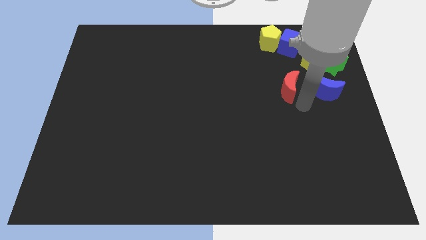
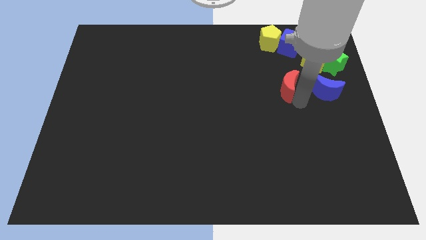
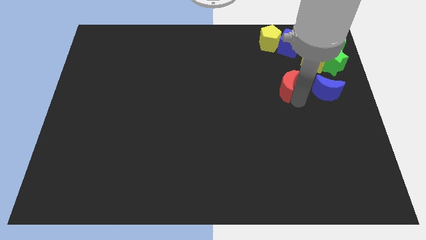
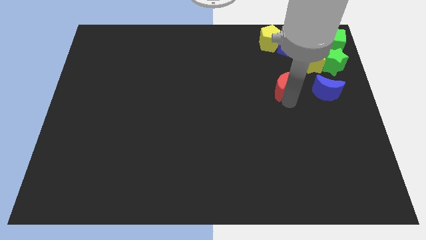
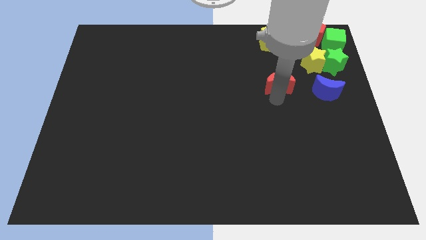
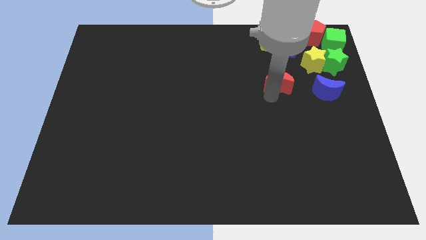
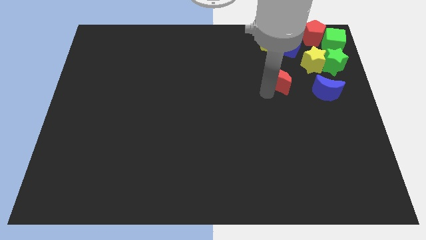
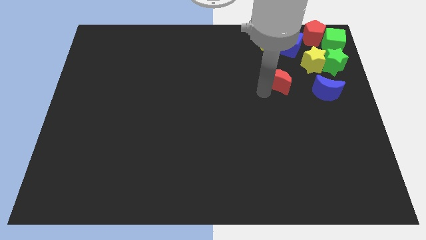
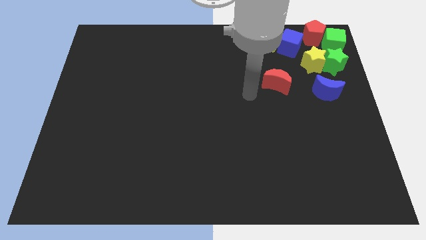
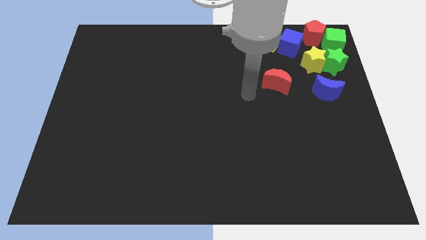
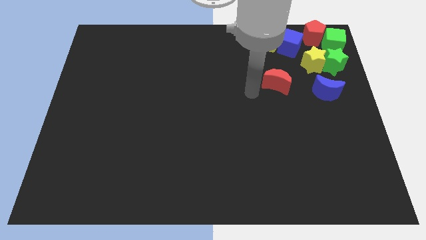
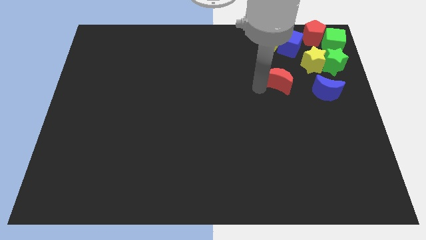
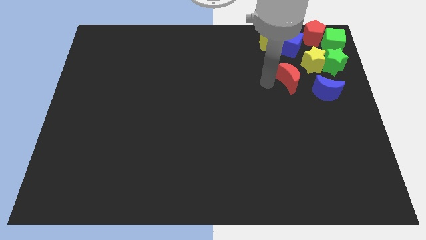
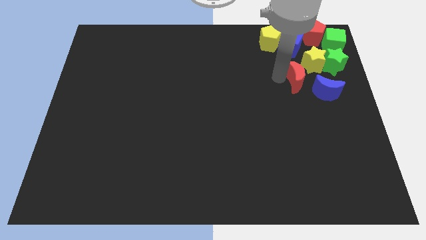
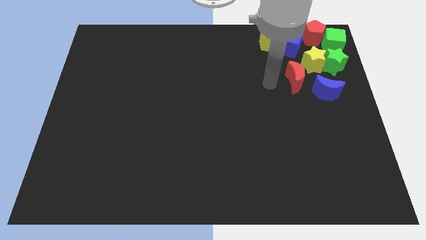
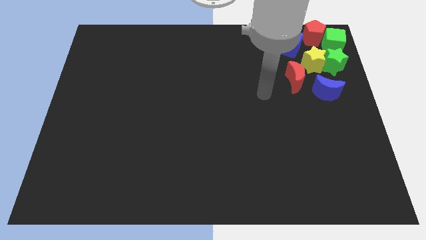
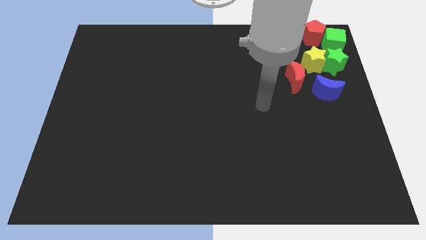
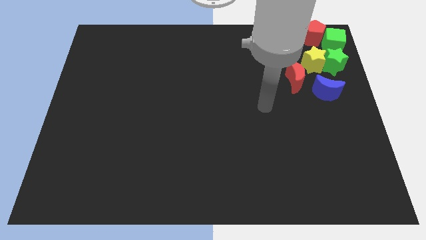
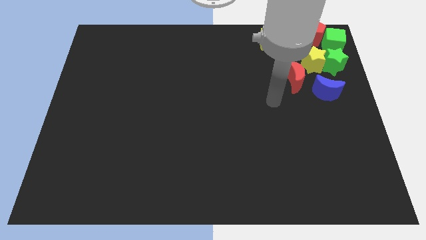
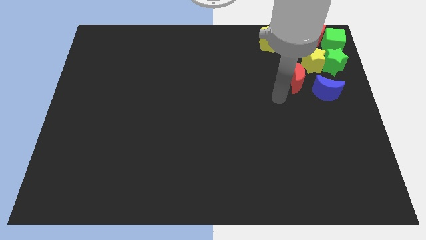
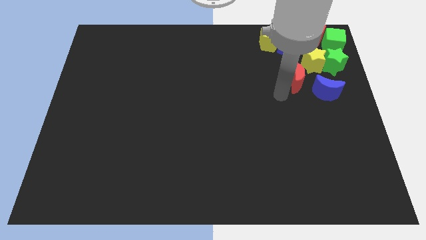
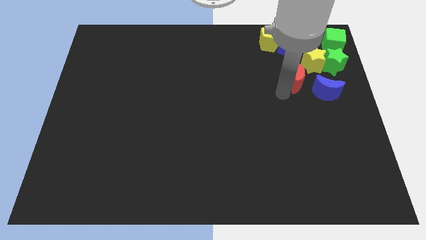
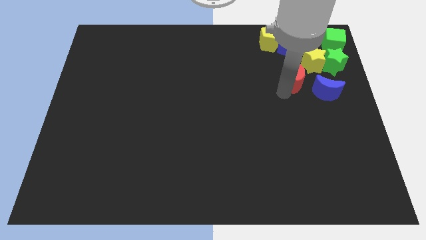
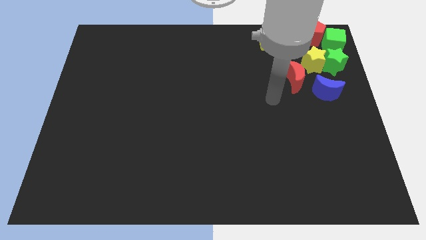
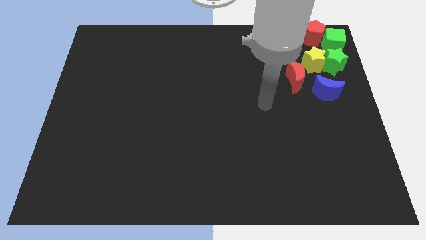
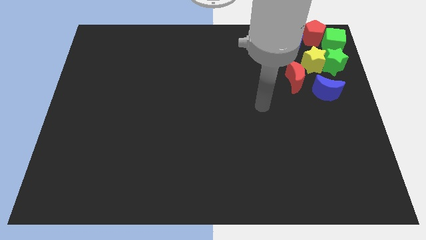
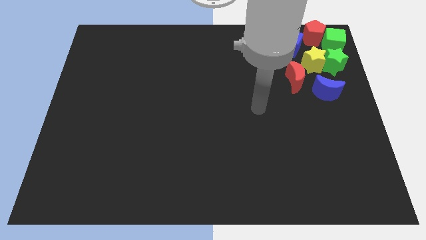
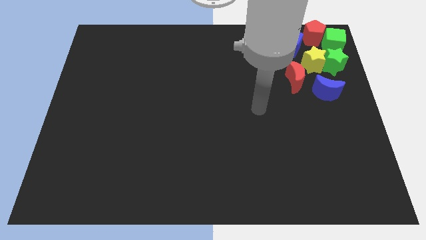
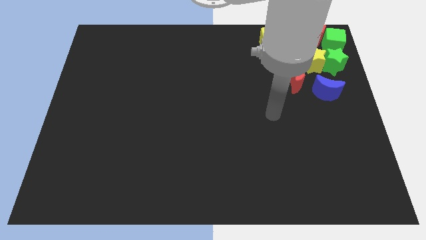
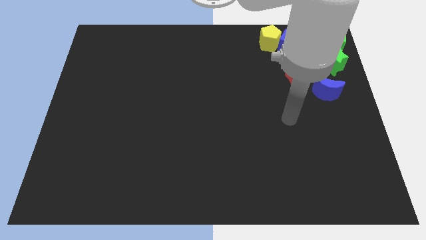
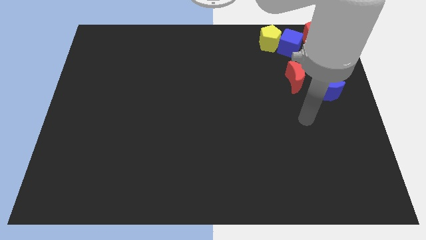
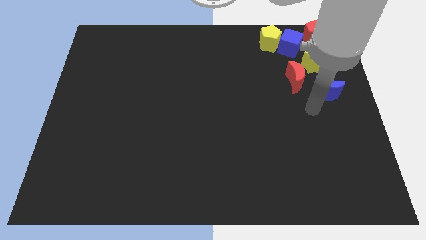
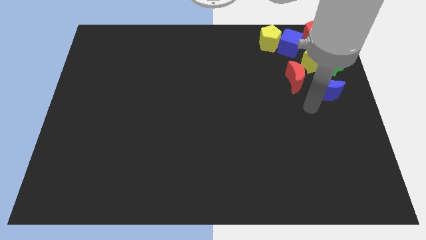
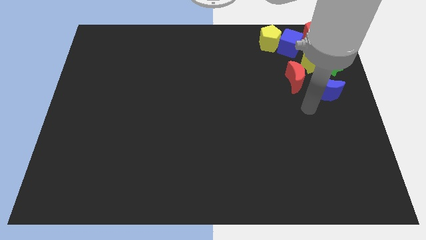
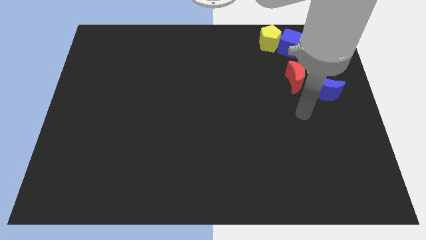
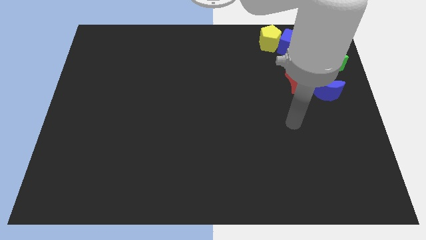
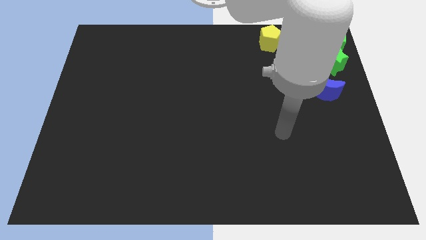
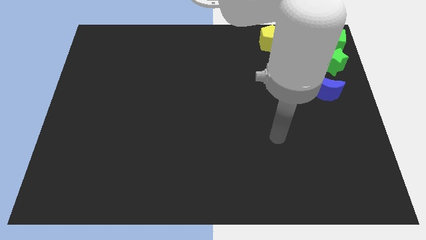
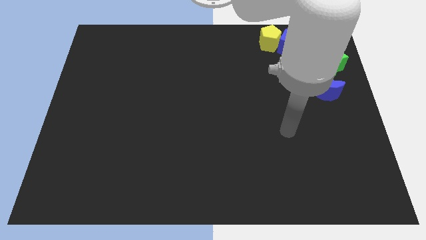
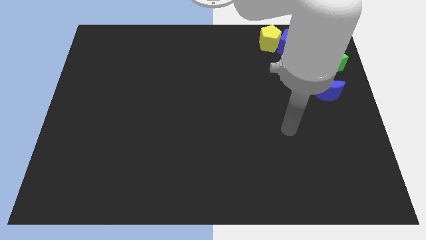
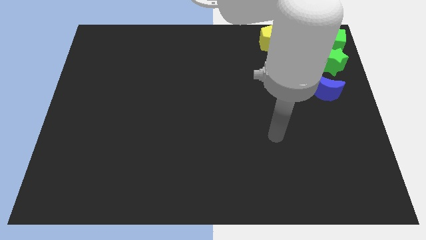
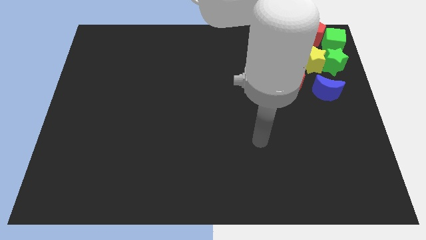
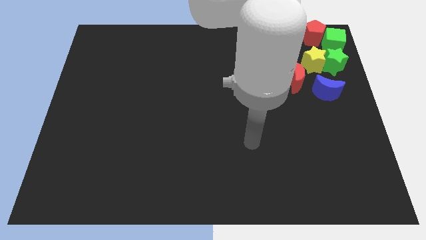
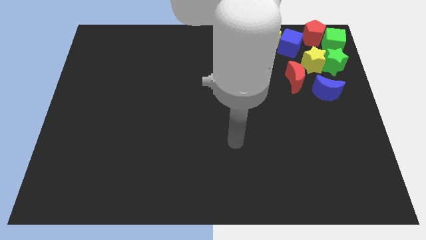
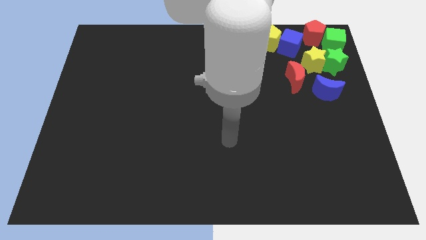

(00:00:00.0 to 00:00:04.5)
push the red crescent into the yellow star

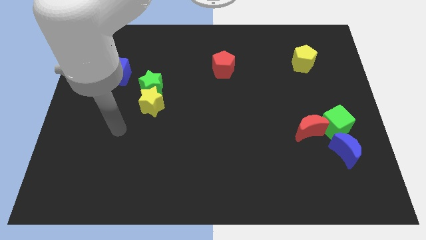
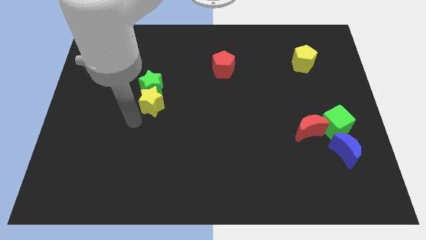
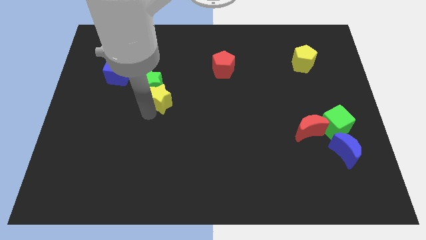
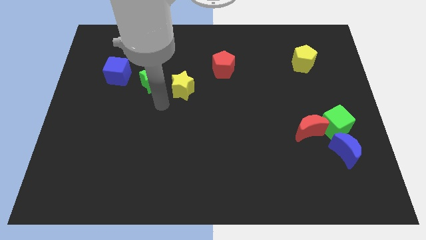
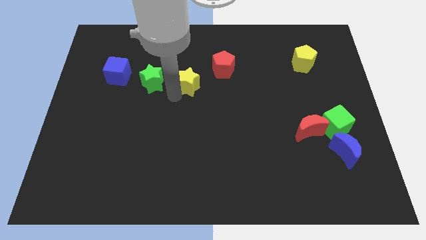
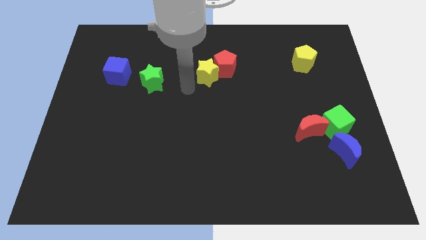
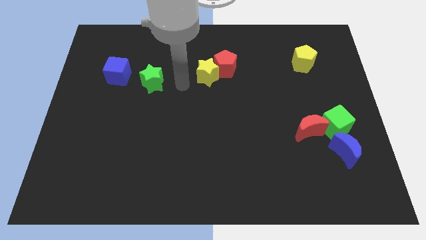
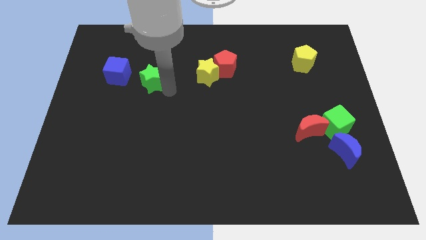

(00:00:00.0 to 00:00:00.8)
separate green star from yellow star

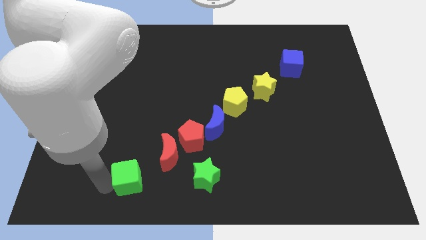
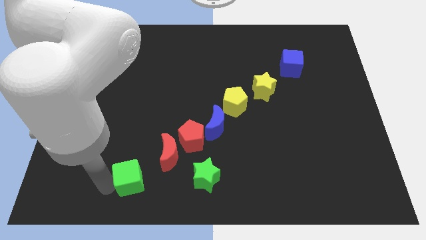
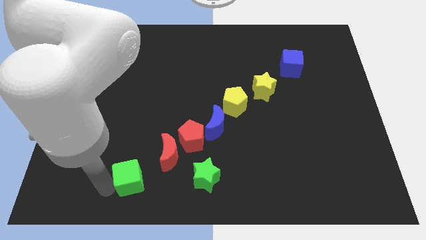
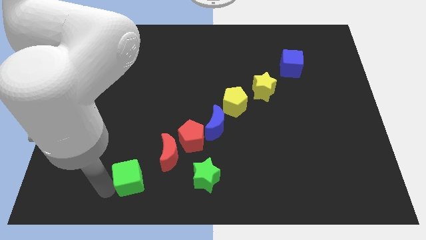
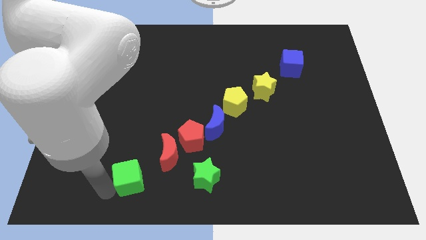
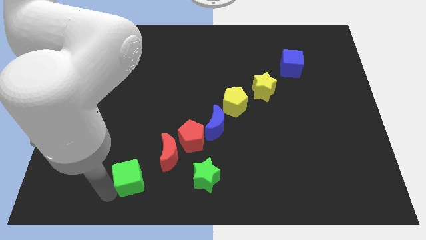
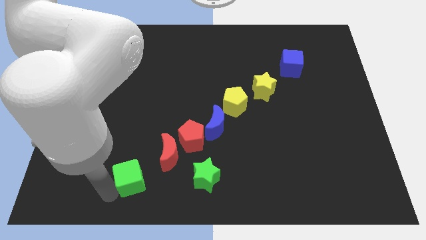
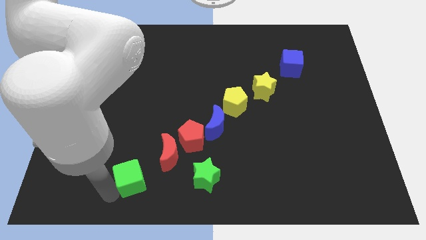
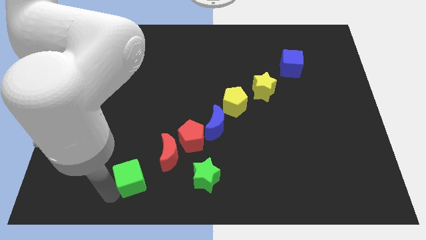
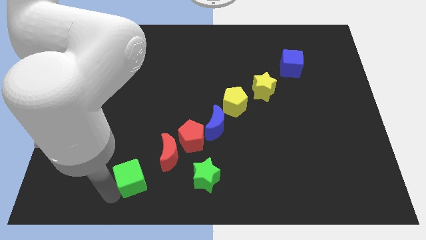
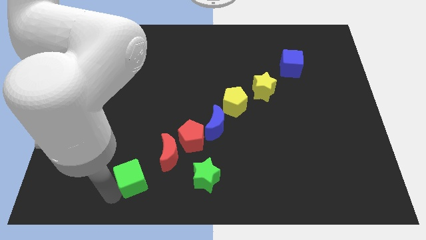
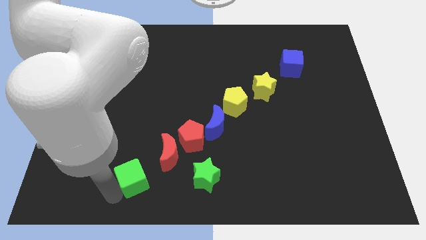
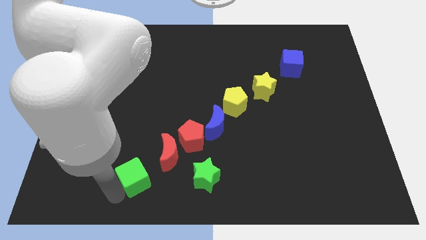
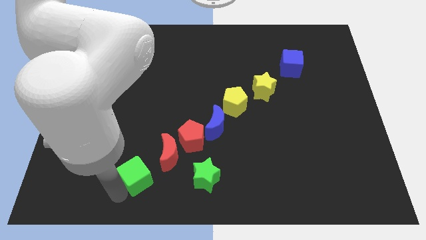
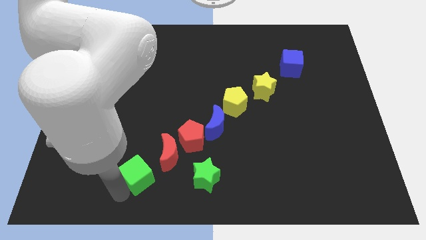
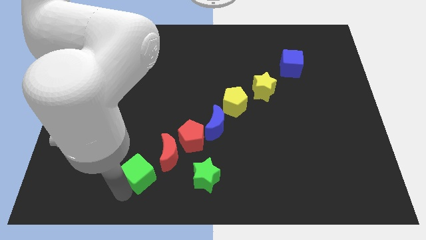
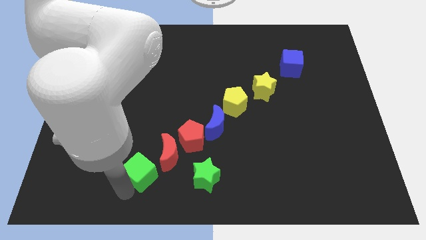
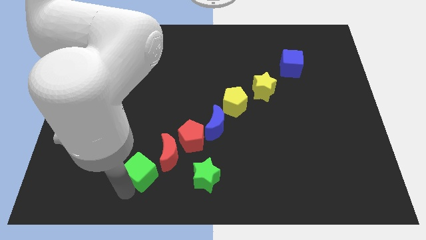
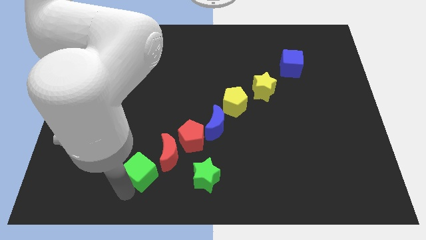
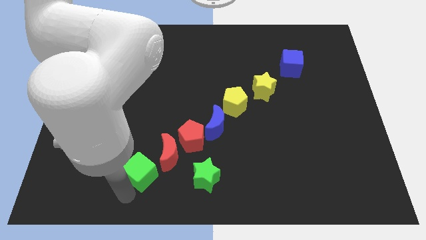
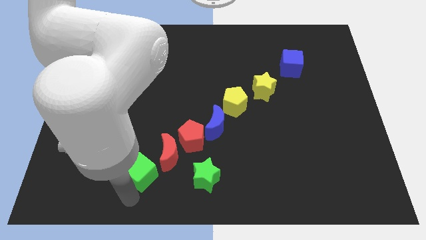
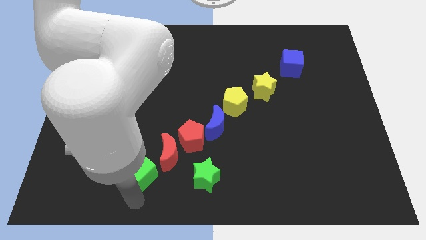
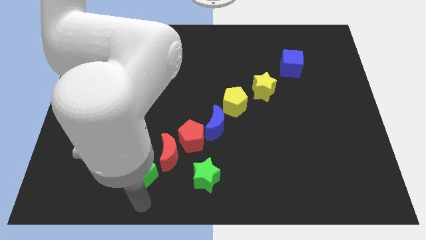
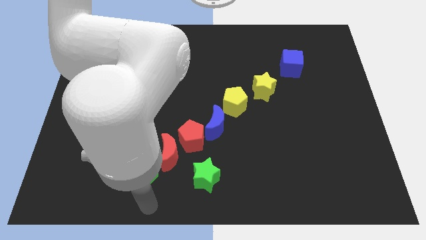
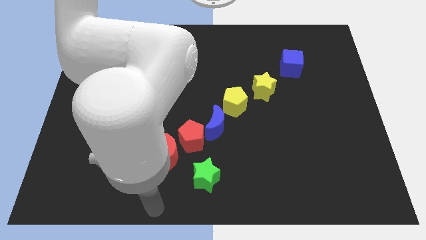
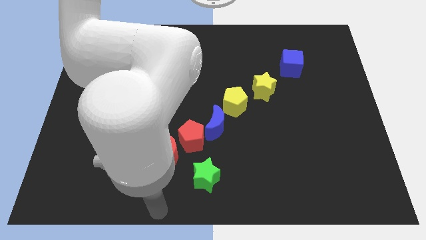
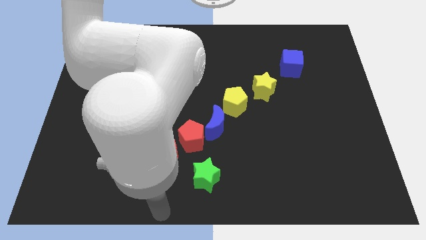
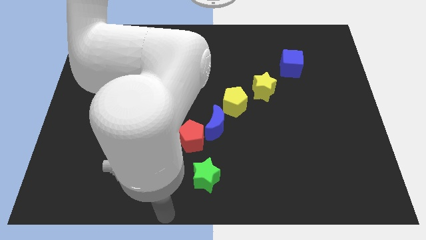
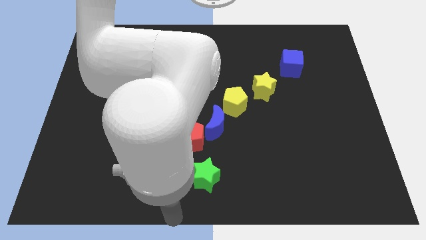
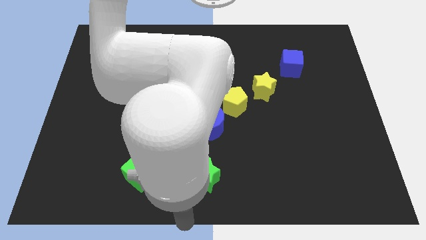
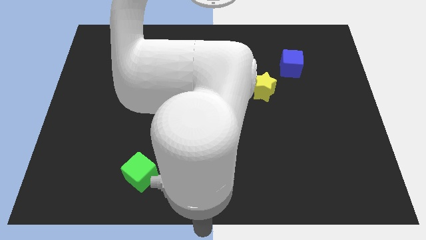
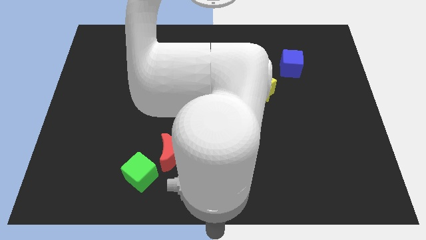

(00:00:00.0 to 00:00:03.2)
point your arm below the yellow star

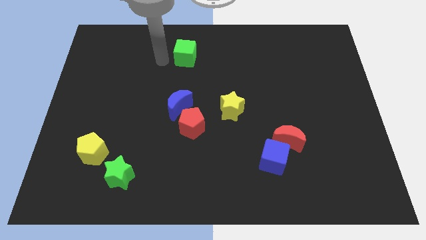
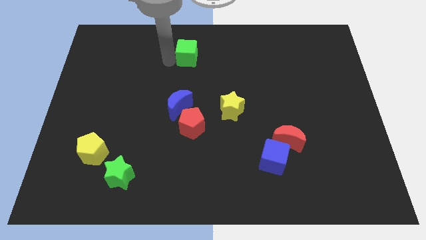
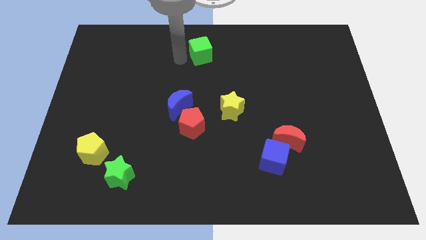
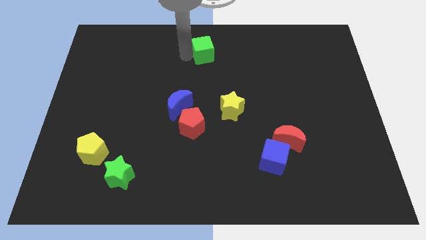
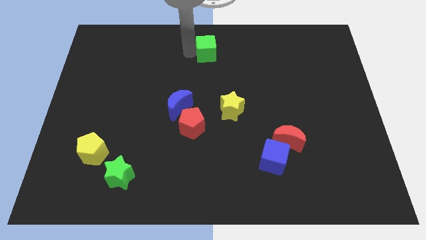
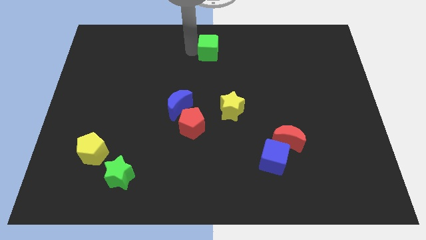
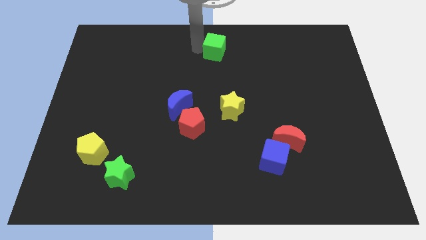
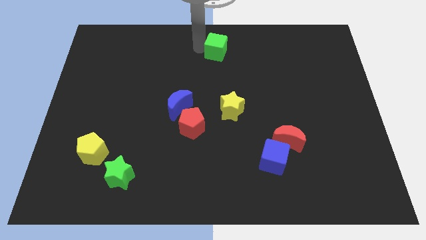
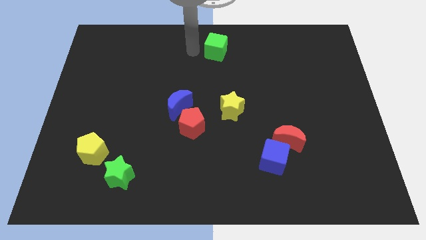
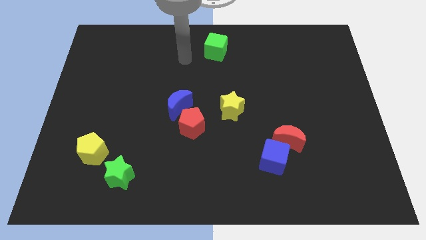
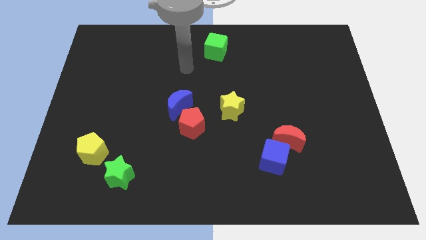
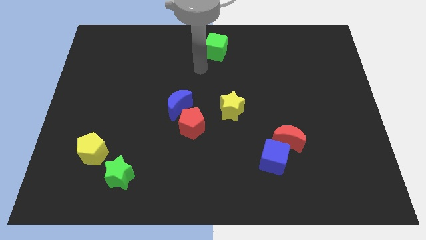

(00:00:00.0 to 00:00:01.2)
move the green cube to the top center
